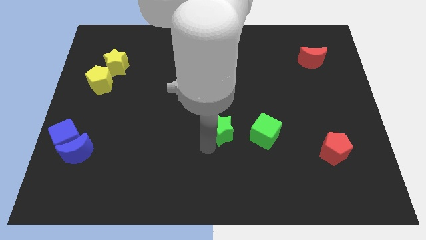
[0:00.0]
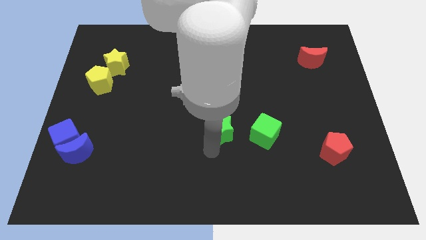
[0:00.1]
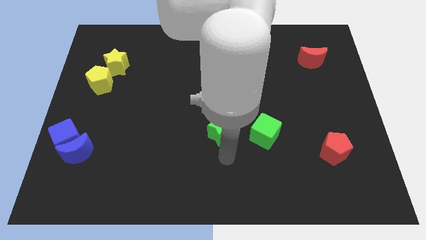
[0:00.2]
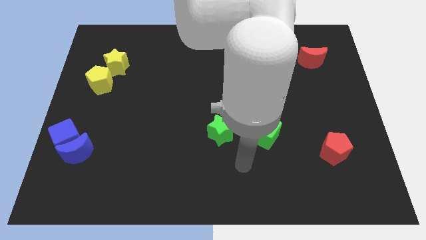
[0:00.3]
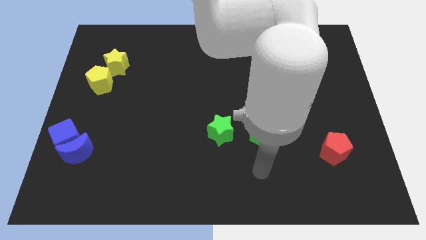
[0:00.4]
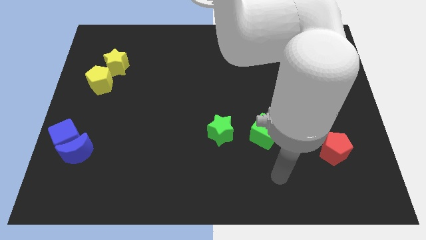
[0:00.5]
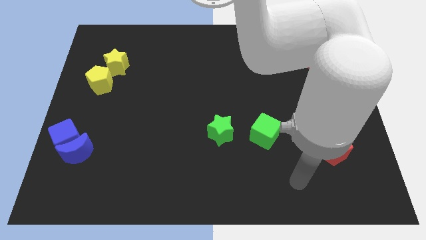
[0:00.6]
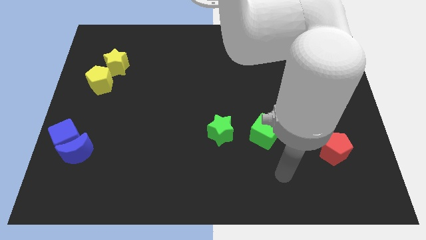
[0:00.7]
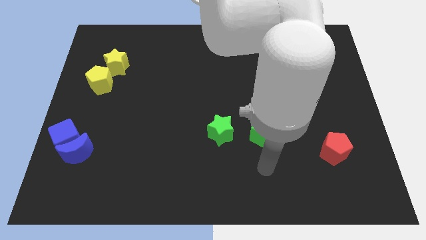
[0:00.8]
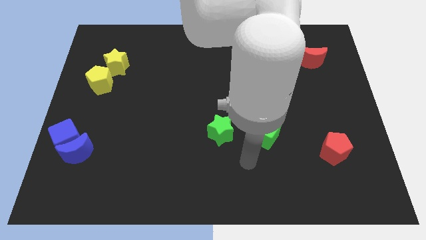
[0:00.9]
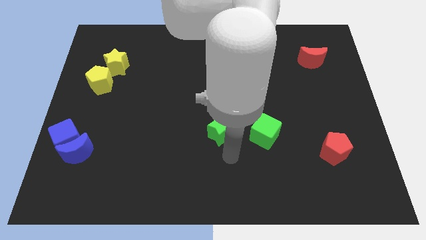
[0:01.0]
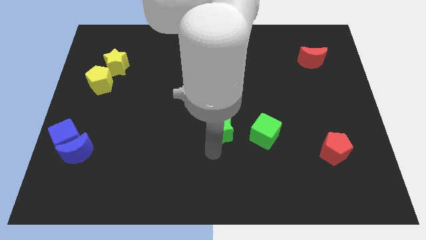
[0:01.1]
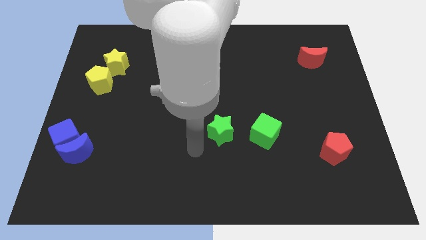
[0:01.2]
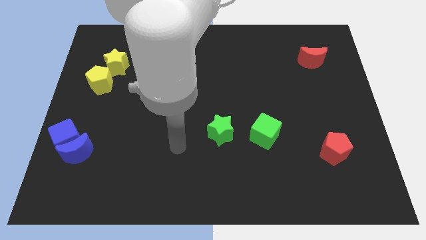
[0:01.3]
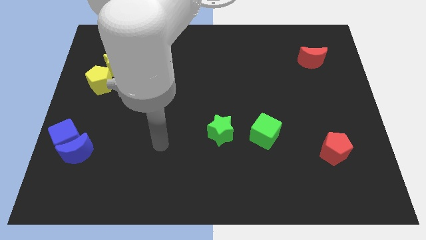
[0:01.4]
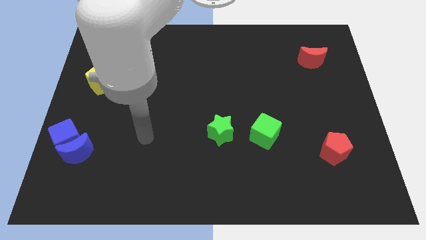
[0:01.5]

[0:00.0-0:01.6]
place your arm in between the green star and blue moon

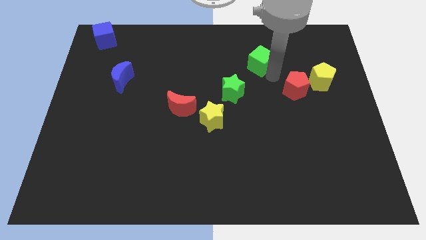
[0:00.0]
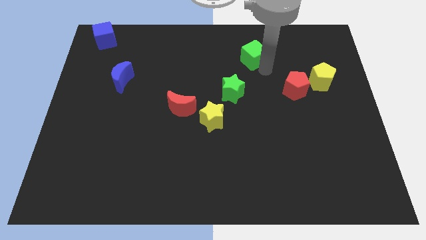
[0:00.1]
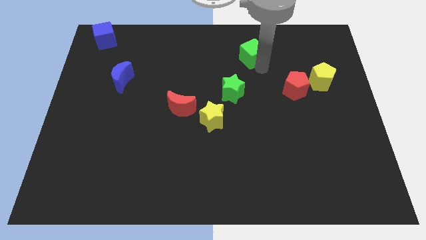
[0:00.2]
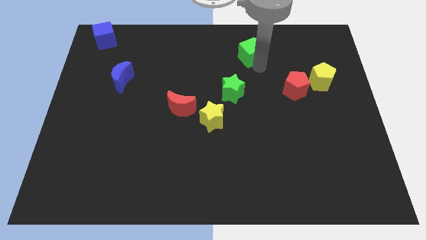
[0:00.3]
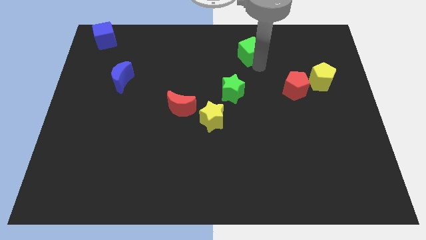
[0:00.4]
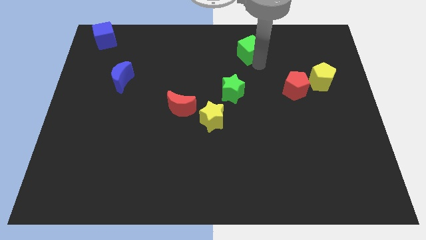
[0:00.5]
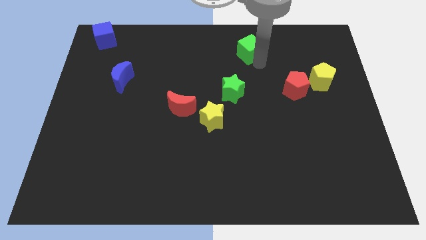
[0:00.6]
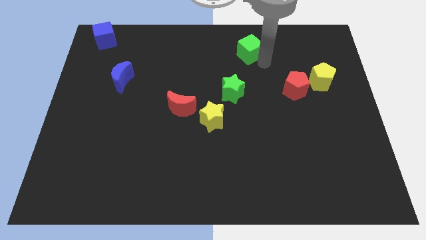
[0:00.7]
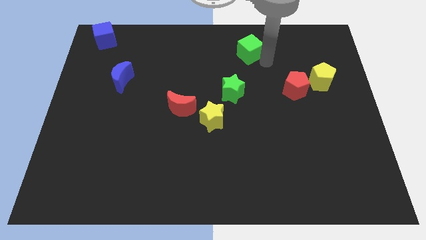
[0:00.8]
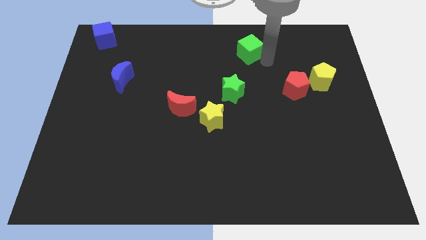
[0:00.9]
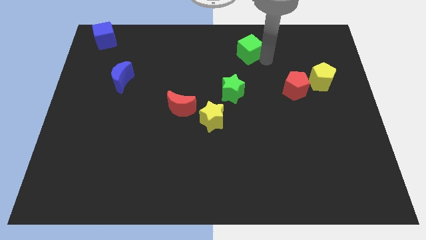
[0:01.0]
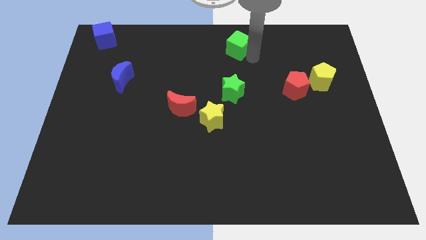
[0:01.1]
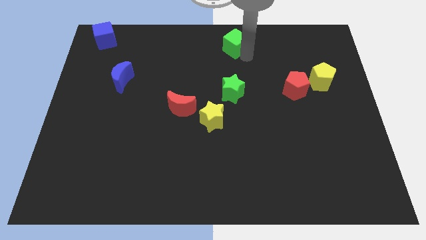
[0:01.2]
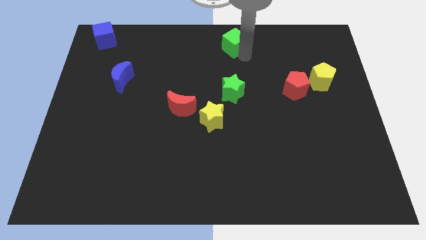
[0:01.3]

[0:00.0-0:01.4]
place green cube to the top of the green star

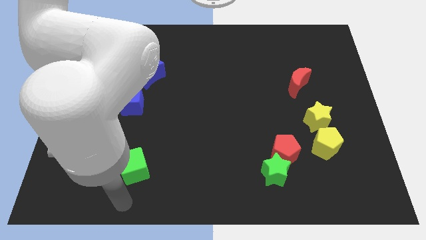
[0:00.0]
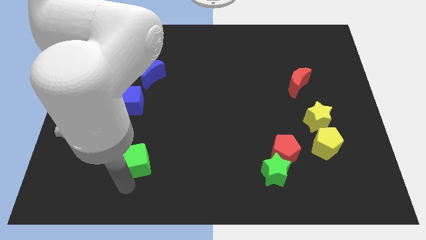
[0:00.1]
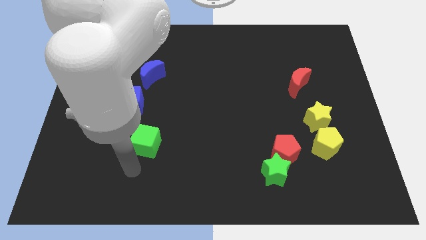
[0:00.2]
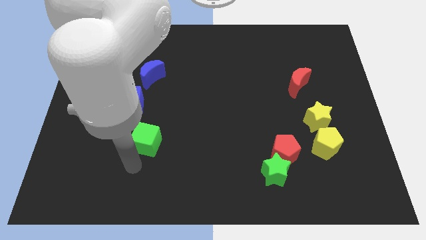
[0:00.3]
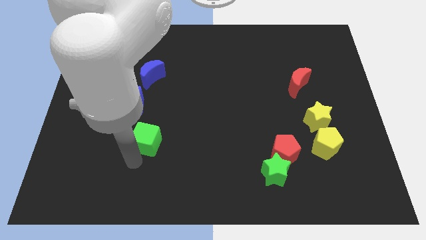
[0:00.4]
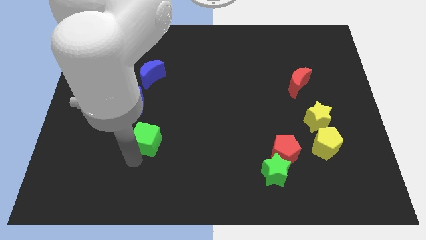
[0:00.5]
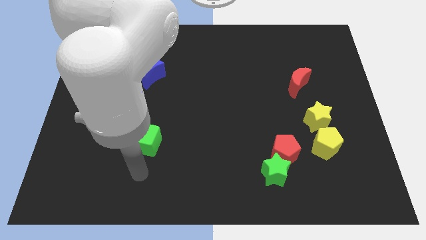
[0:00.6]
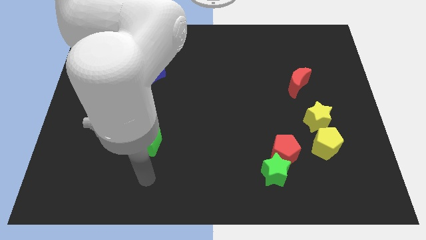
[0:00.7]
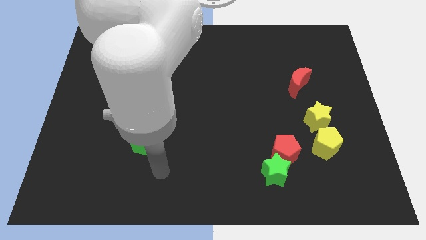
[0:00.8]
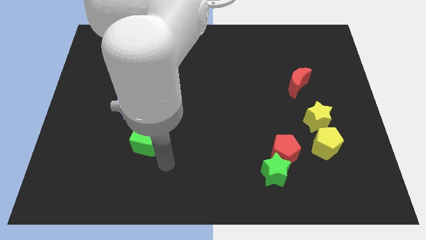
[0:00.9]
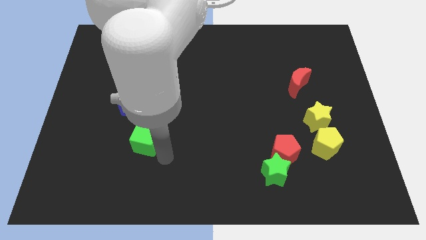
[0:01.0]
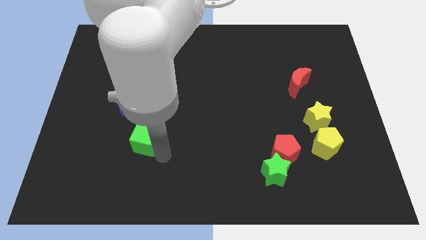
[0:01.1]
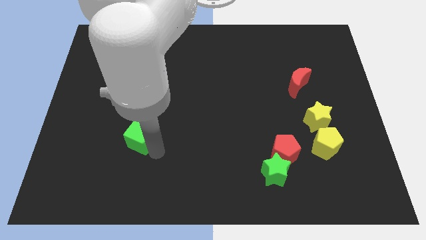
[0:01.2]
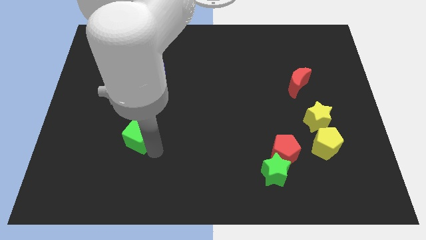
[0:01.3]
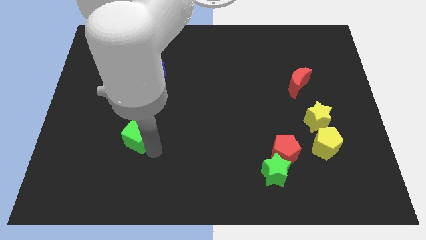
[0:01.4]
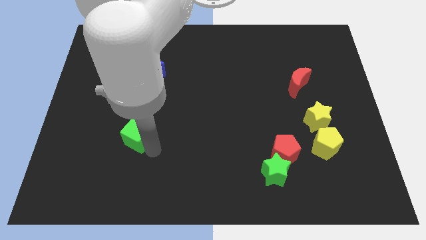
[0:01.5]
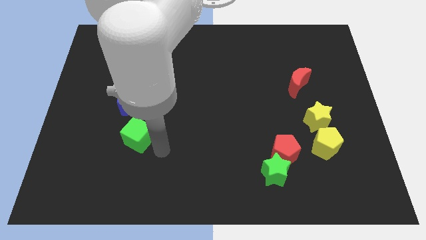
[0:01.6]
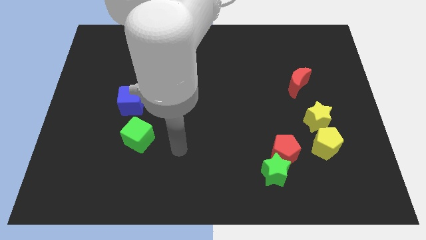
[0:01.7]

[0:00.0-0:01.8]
place the green cube to the bottom of blue cube

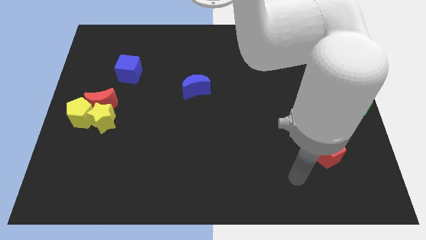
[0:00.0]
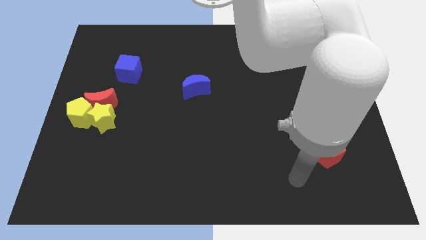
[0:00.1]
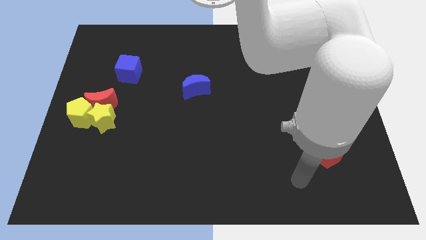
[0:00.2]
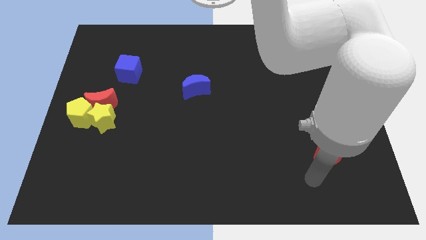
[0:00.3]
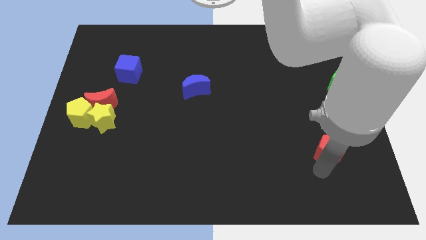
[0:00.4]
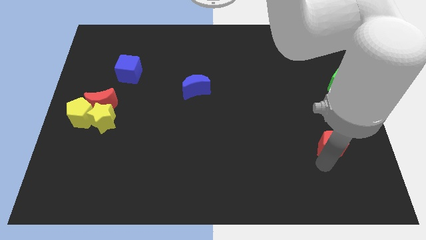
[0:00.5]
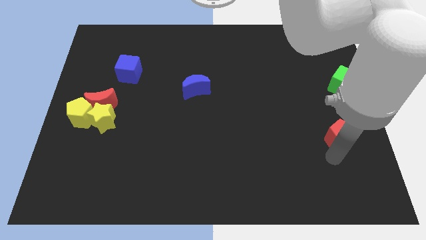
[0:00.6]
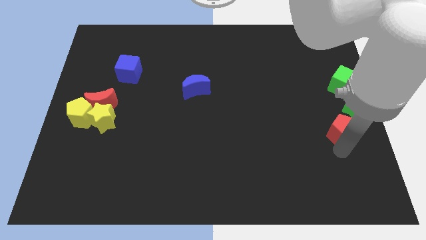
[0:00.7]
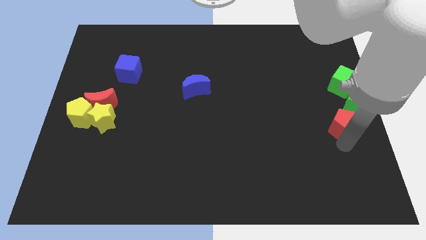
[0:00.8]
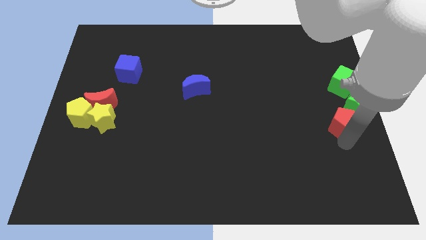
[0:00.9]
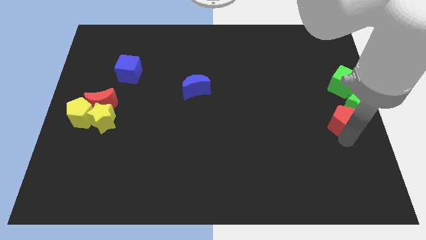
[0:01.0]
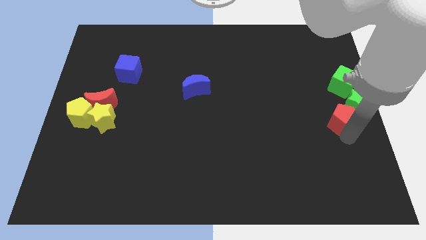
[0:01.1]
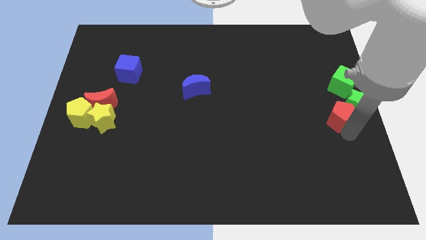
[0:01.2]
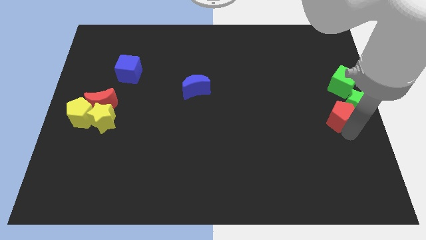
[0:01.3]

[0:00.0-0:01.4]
move the red pentagon close to the green star

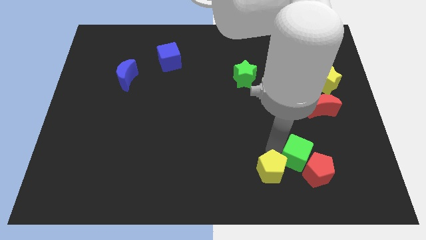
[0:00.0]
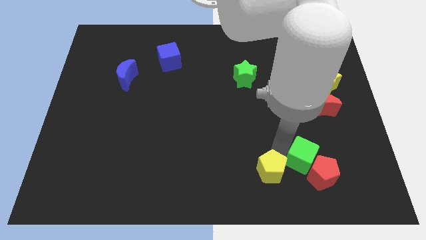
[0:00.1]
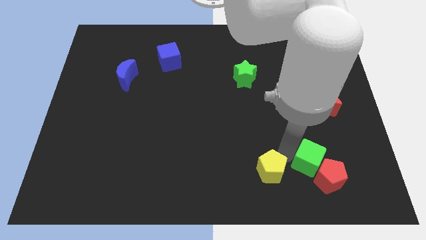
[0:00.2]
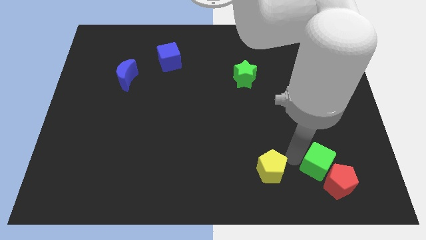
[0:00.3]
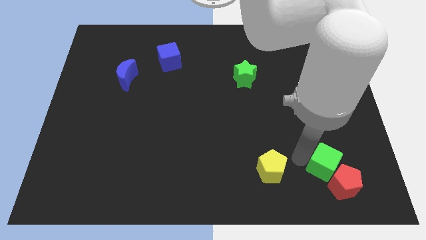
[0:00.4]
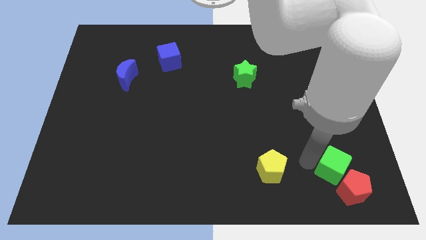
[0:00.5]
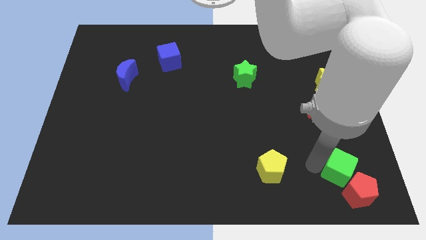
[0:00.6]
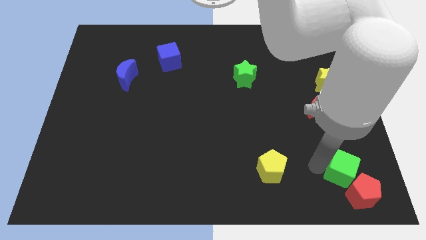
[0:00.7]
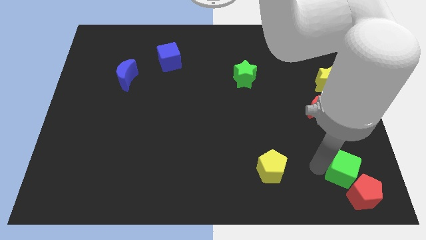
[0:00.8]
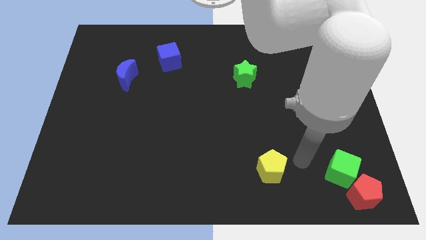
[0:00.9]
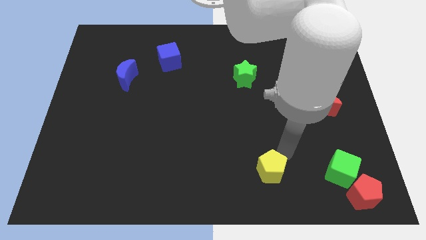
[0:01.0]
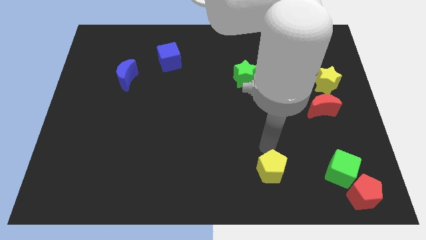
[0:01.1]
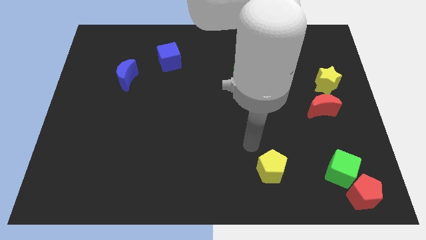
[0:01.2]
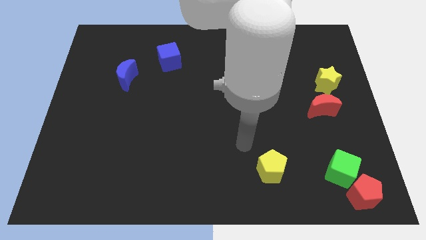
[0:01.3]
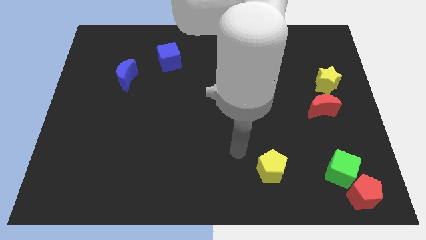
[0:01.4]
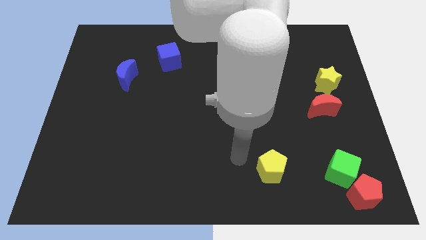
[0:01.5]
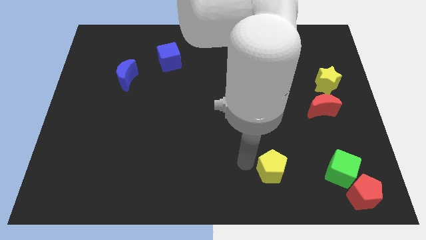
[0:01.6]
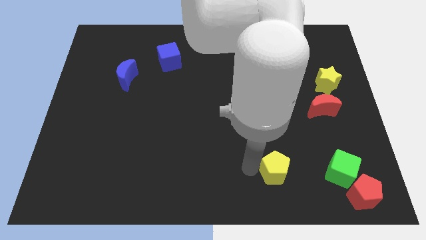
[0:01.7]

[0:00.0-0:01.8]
push green cube and red pentagon to the bottom right corner of the board

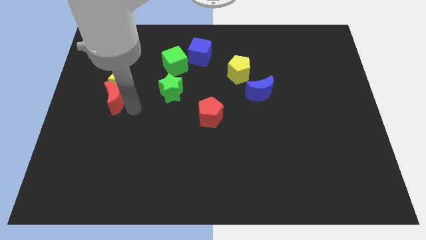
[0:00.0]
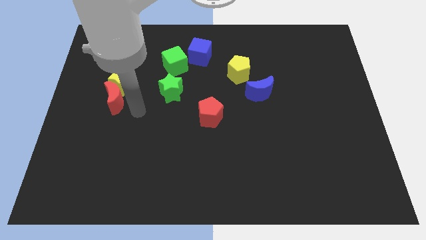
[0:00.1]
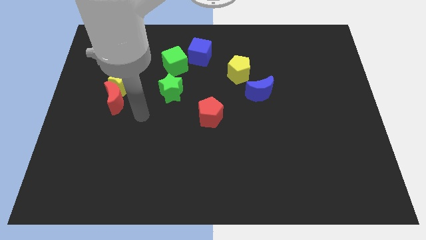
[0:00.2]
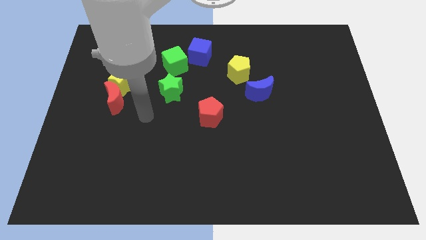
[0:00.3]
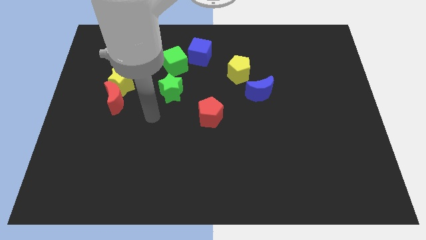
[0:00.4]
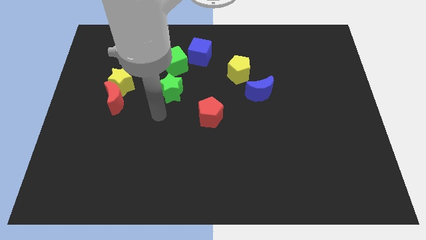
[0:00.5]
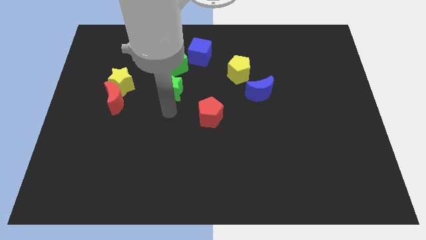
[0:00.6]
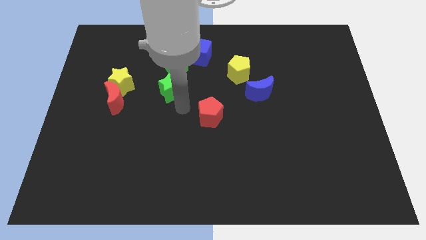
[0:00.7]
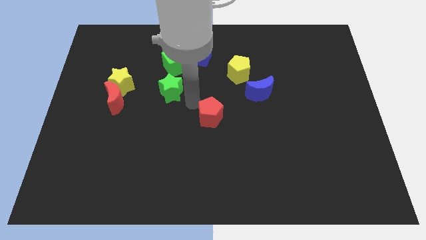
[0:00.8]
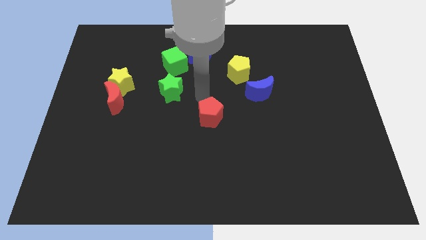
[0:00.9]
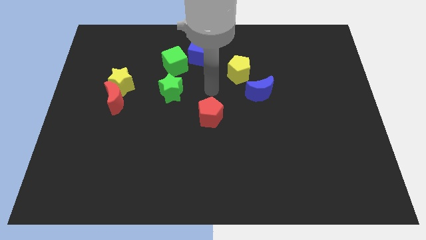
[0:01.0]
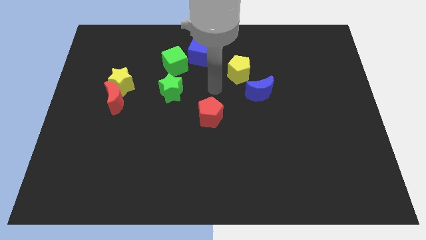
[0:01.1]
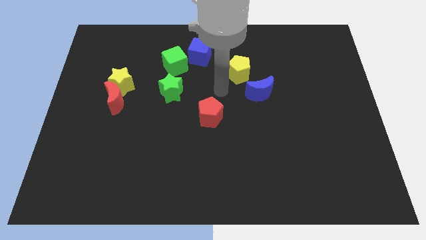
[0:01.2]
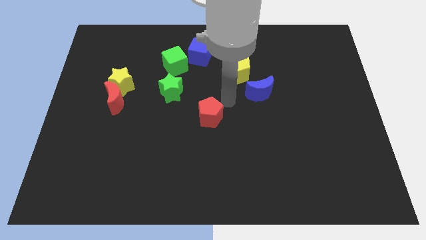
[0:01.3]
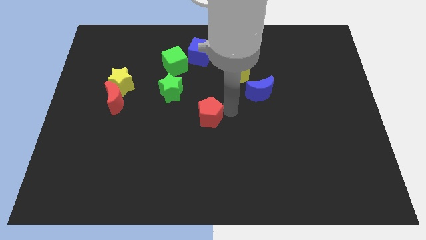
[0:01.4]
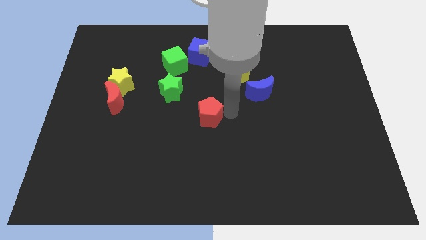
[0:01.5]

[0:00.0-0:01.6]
place the arm right to the red pentagon
